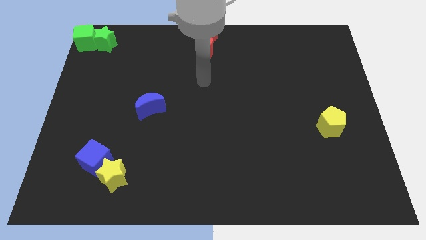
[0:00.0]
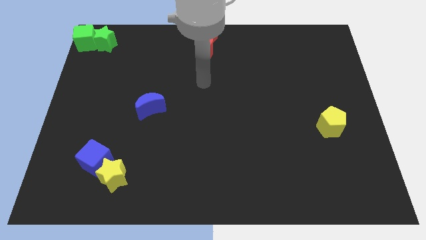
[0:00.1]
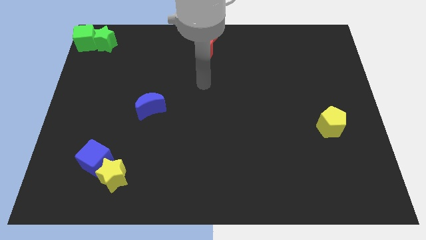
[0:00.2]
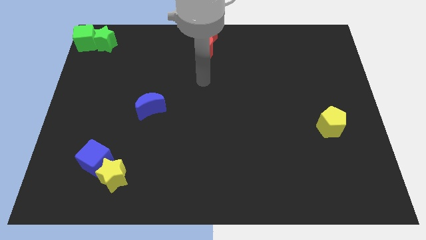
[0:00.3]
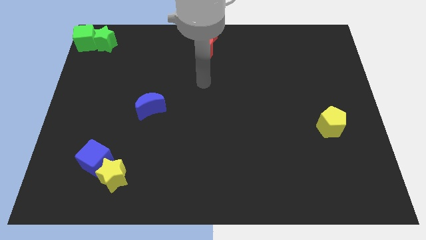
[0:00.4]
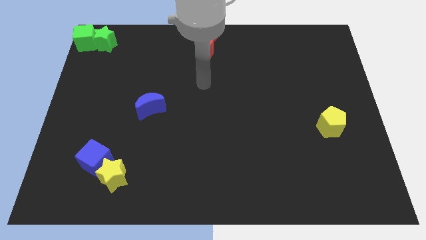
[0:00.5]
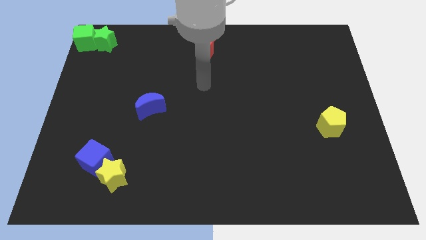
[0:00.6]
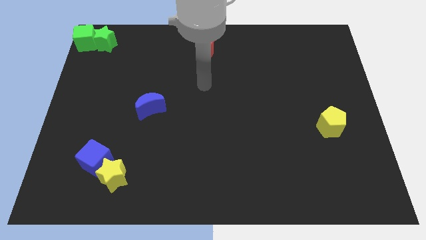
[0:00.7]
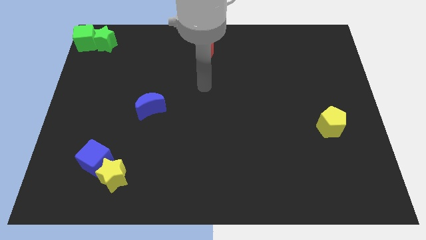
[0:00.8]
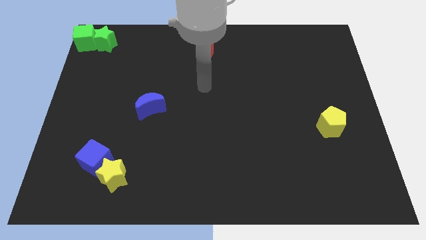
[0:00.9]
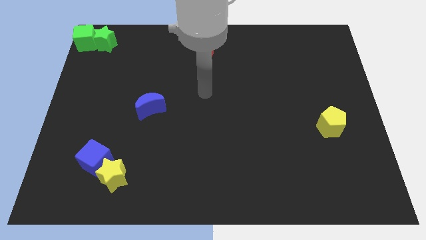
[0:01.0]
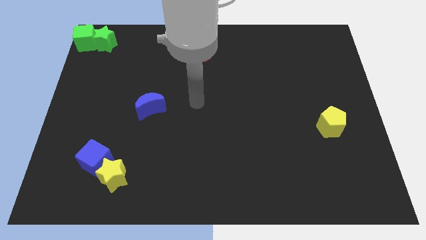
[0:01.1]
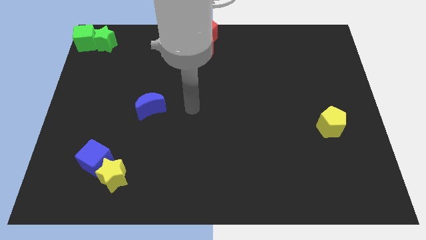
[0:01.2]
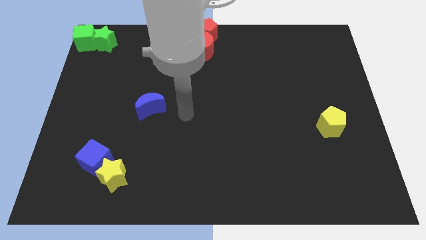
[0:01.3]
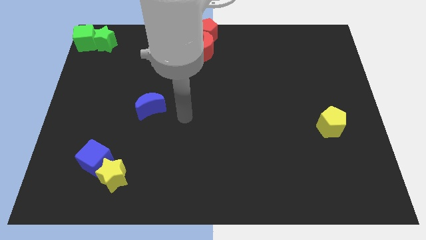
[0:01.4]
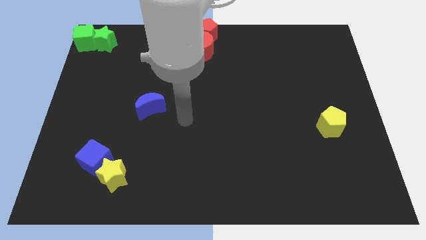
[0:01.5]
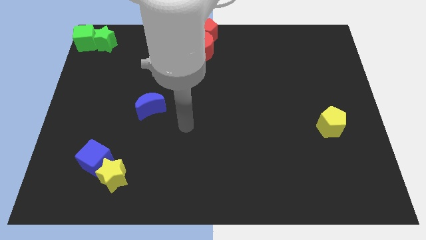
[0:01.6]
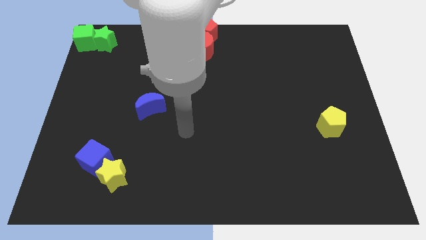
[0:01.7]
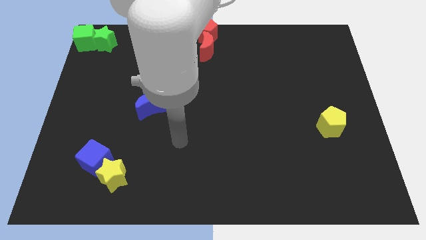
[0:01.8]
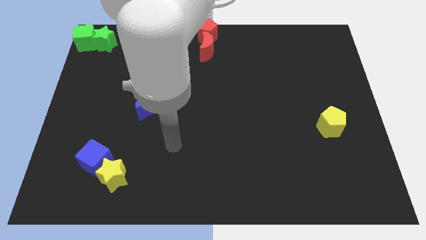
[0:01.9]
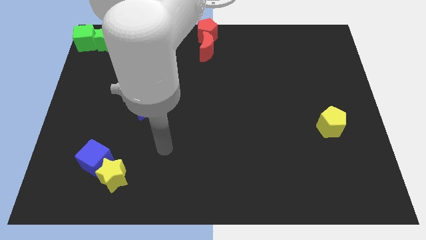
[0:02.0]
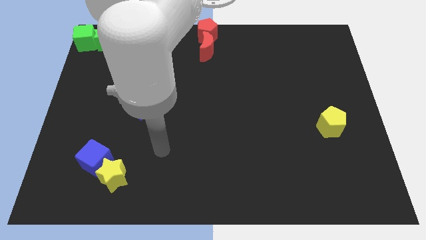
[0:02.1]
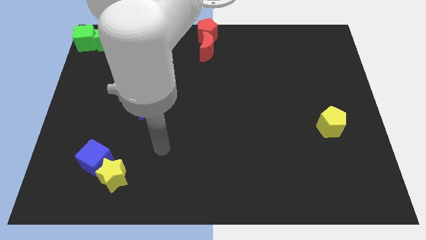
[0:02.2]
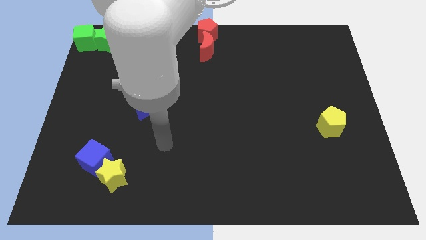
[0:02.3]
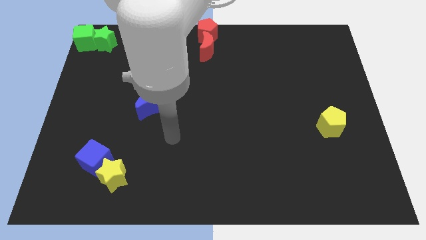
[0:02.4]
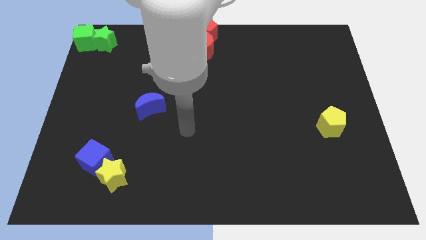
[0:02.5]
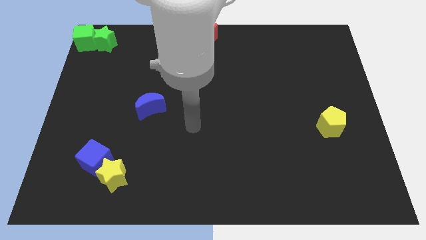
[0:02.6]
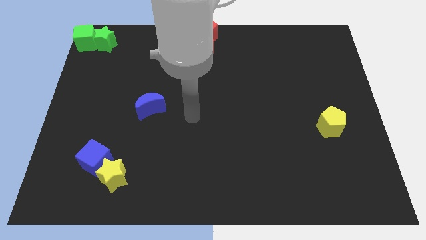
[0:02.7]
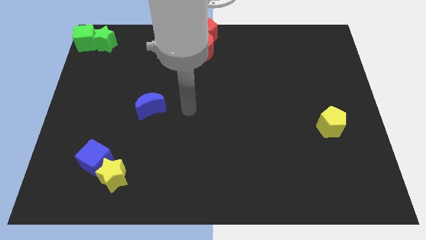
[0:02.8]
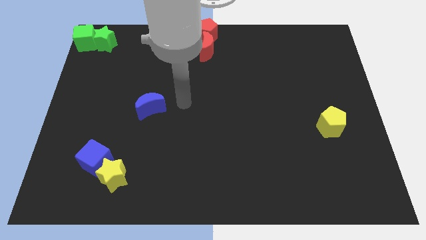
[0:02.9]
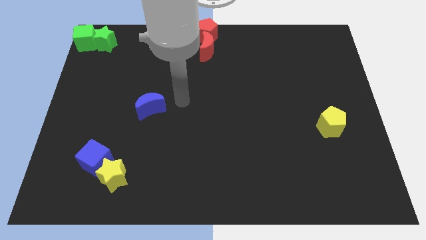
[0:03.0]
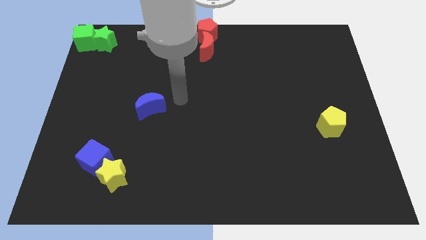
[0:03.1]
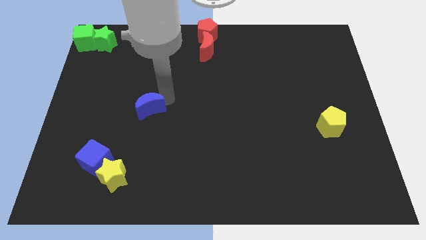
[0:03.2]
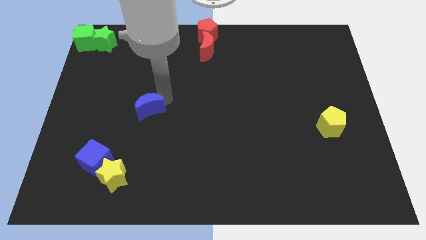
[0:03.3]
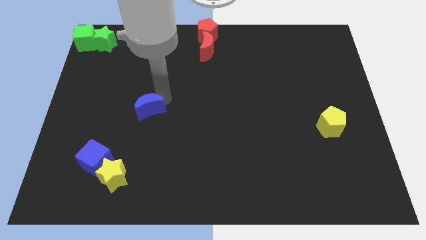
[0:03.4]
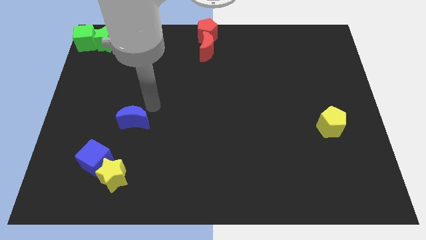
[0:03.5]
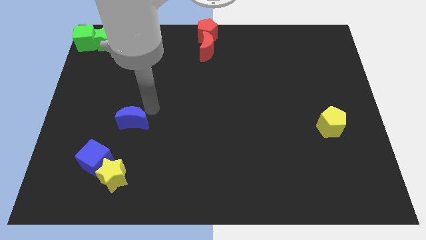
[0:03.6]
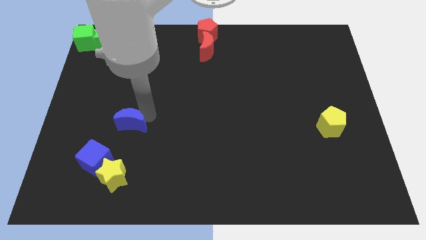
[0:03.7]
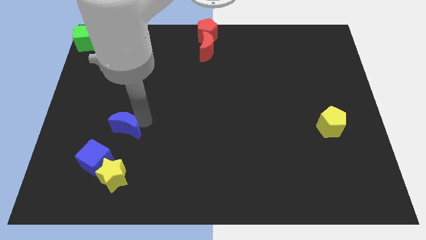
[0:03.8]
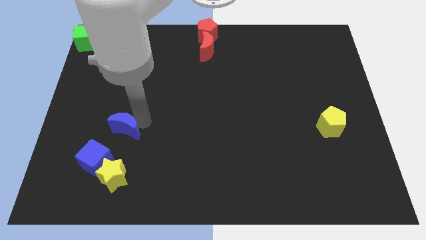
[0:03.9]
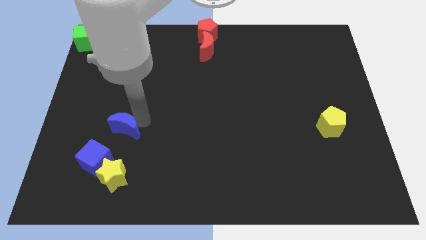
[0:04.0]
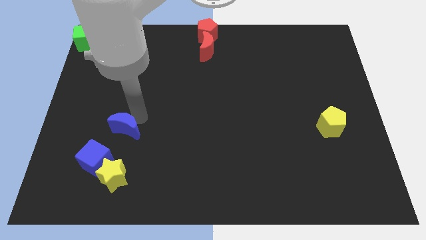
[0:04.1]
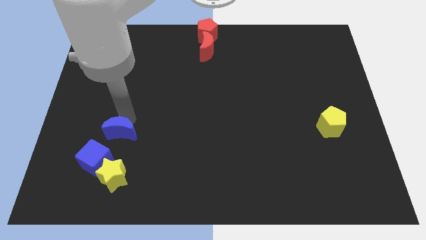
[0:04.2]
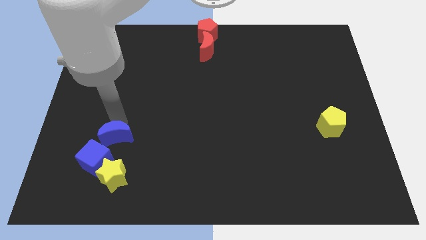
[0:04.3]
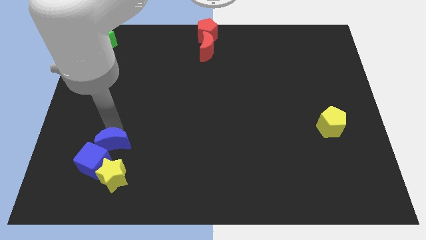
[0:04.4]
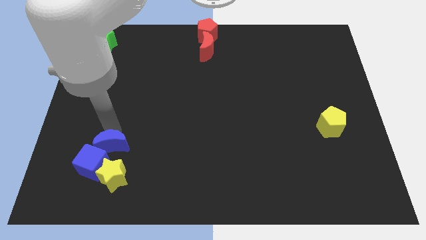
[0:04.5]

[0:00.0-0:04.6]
push the blue moon into the blue cube

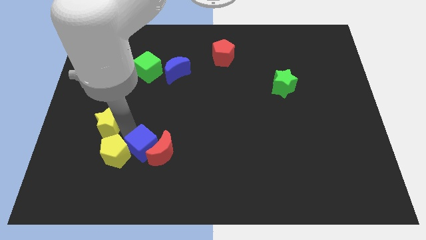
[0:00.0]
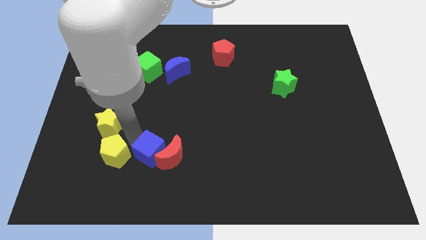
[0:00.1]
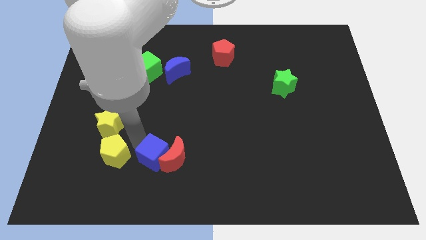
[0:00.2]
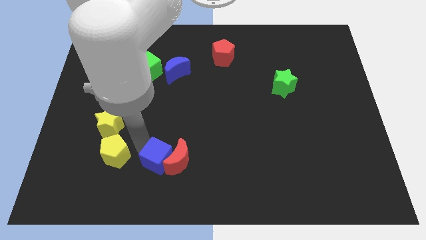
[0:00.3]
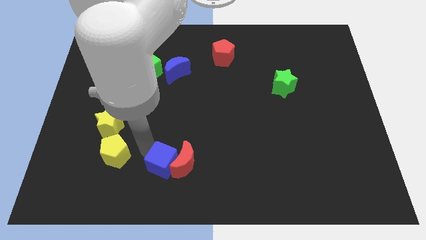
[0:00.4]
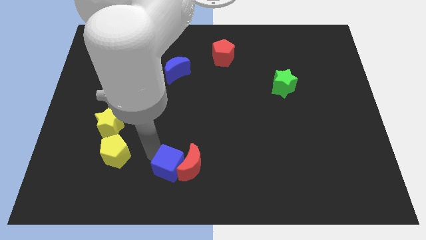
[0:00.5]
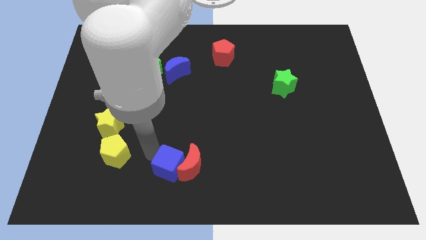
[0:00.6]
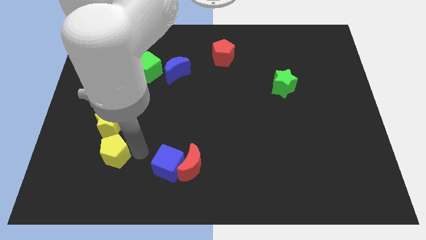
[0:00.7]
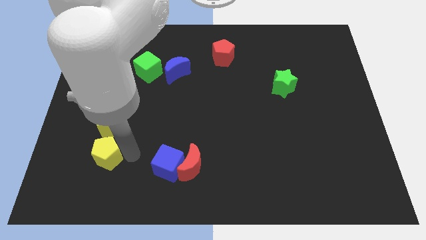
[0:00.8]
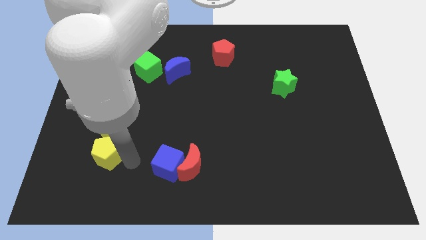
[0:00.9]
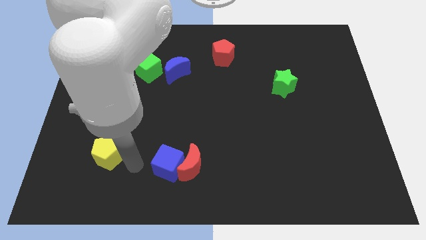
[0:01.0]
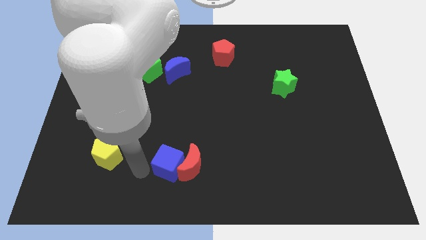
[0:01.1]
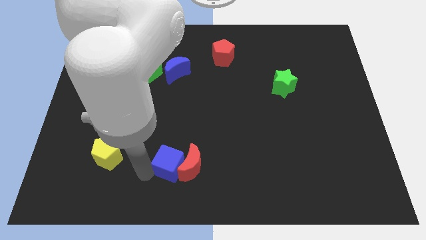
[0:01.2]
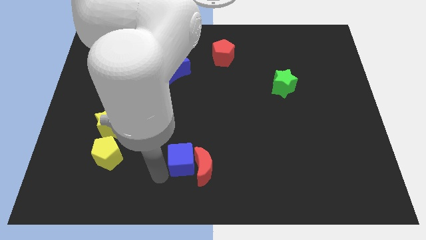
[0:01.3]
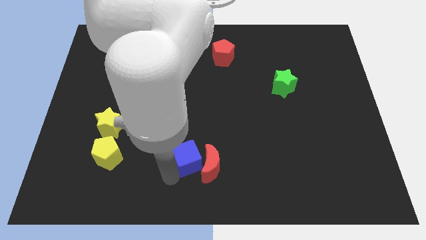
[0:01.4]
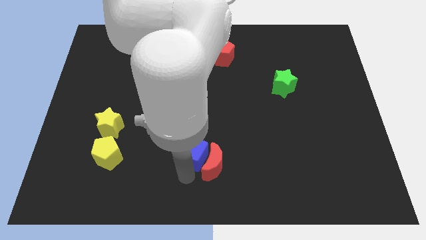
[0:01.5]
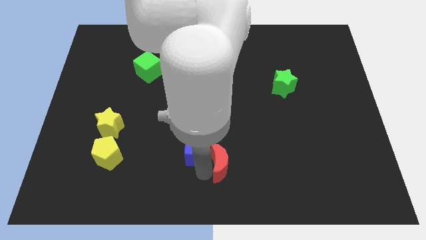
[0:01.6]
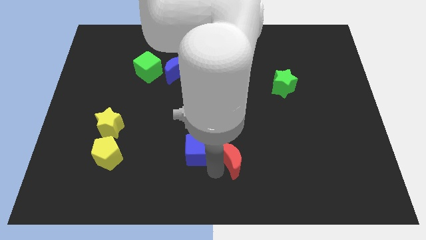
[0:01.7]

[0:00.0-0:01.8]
separate blue cube and the red moon from the yellow blocks

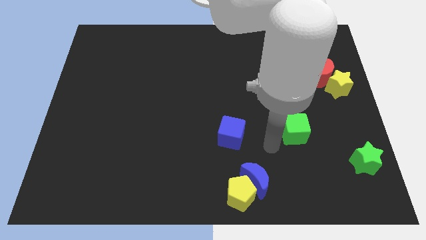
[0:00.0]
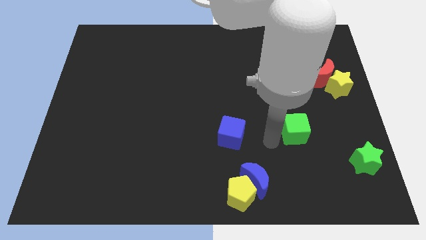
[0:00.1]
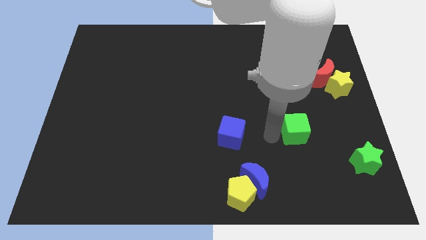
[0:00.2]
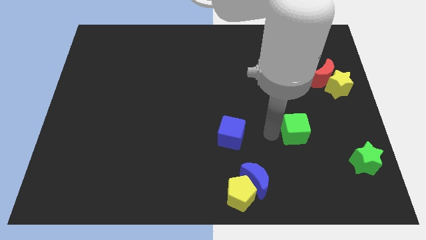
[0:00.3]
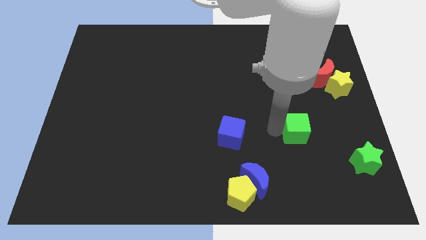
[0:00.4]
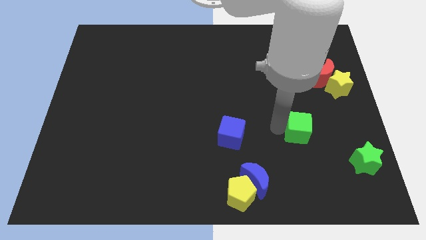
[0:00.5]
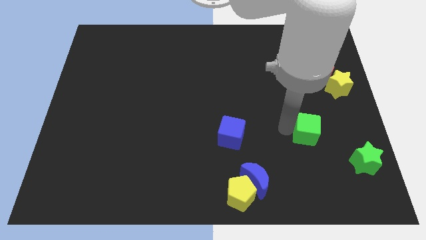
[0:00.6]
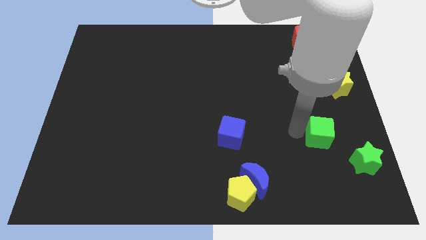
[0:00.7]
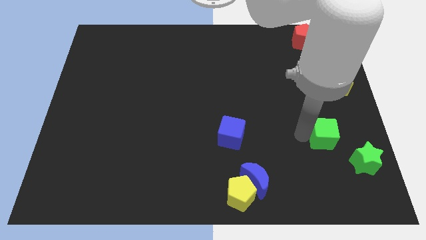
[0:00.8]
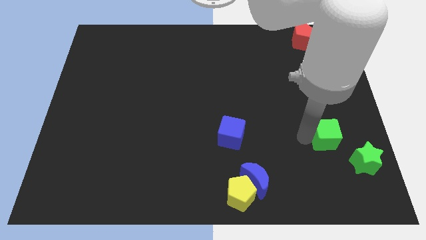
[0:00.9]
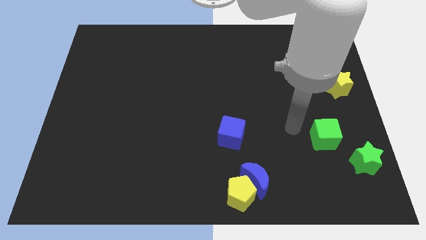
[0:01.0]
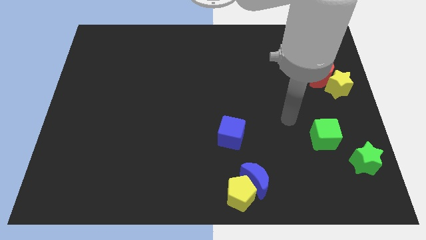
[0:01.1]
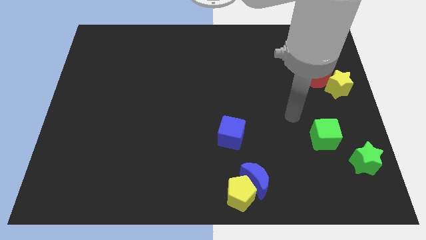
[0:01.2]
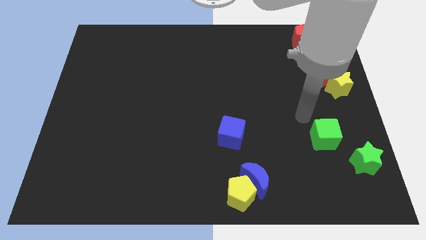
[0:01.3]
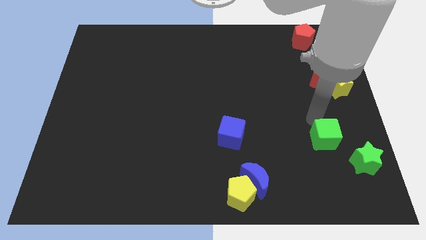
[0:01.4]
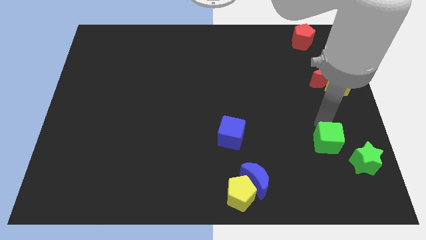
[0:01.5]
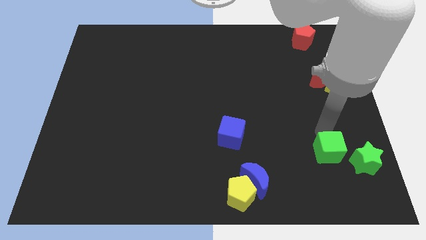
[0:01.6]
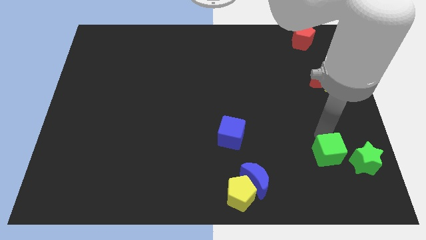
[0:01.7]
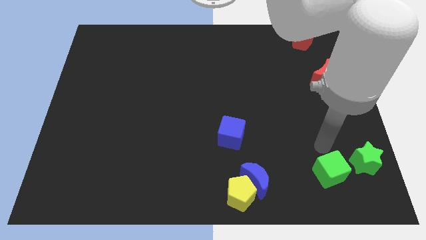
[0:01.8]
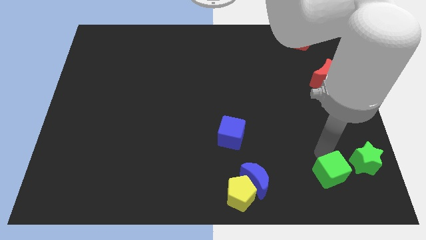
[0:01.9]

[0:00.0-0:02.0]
move the green cube to the left of the green star

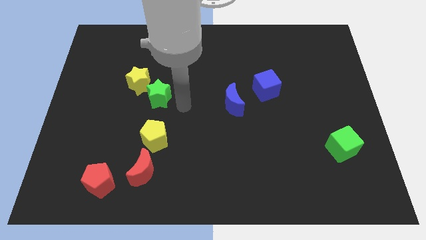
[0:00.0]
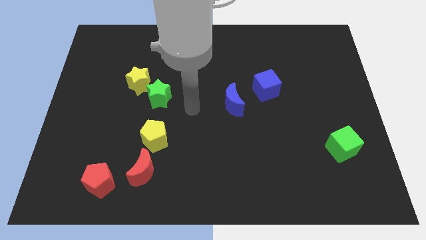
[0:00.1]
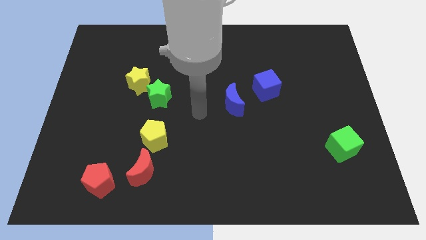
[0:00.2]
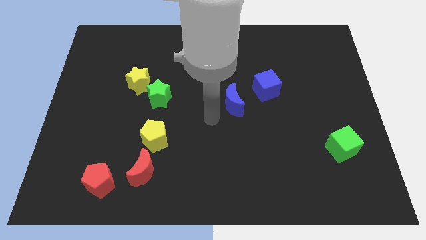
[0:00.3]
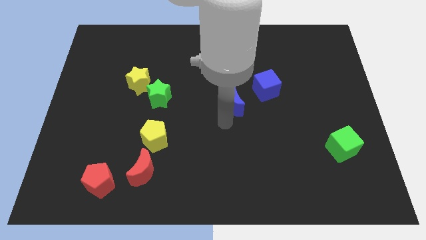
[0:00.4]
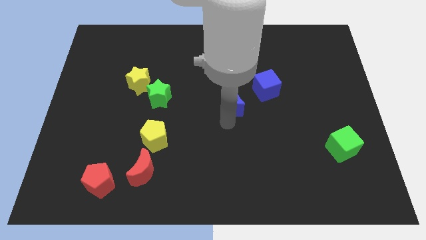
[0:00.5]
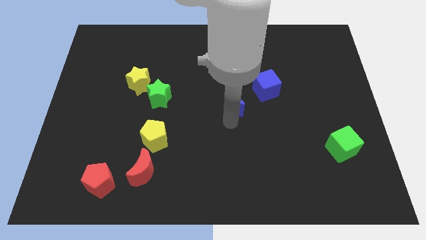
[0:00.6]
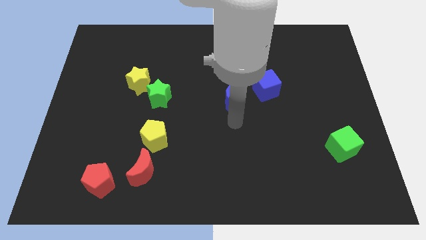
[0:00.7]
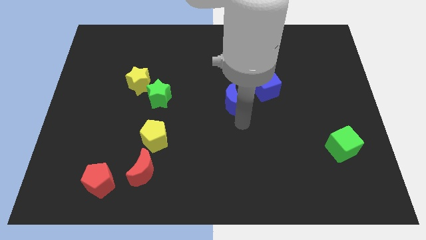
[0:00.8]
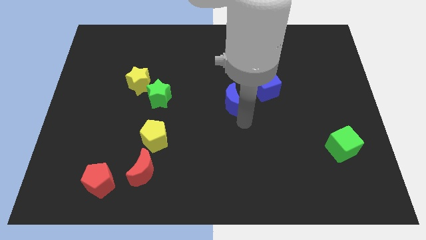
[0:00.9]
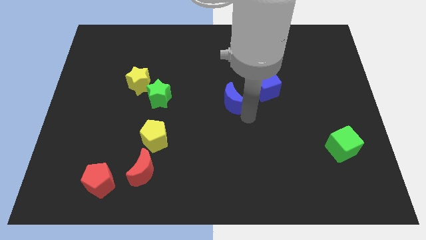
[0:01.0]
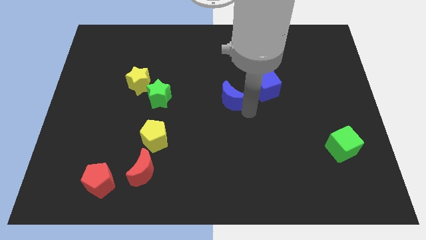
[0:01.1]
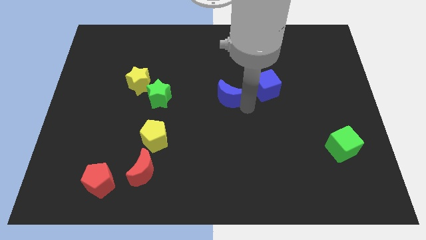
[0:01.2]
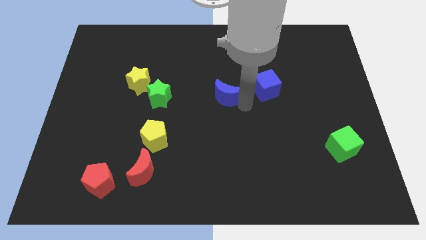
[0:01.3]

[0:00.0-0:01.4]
point your arm below blue moon
